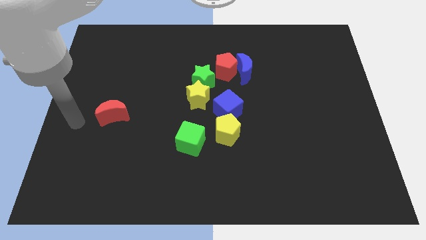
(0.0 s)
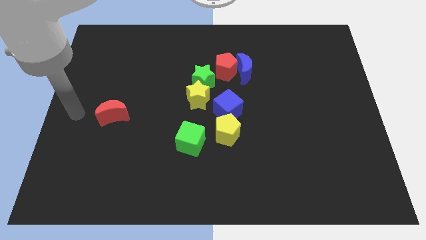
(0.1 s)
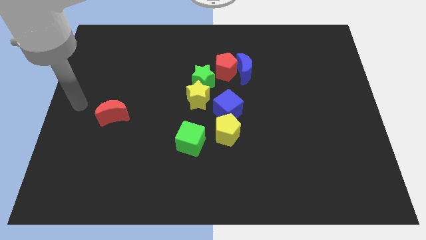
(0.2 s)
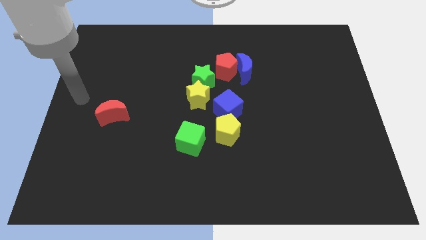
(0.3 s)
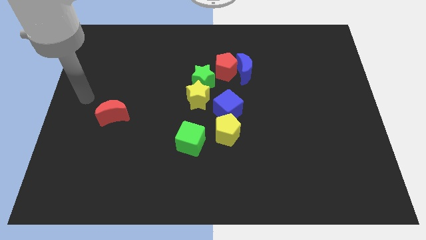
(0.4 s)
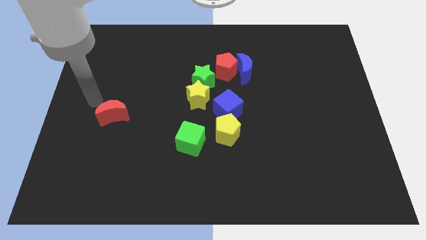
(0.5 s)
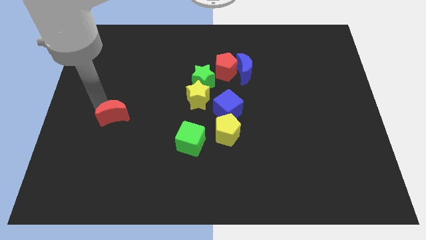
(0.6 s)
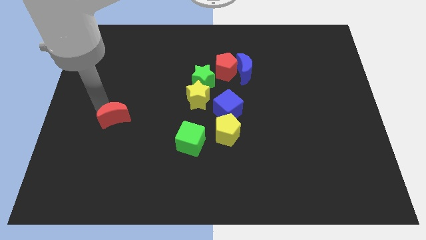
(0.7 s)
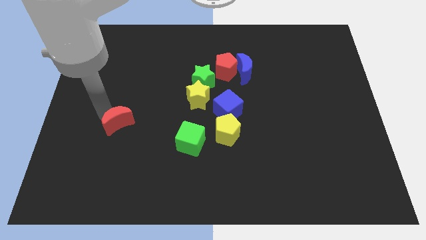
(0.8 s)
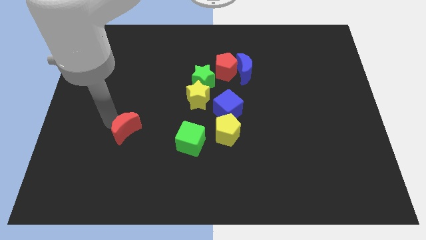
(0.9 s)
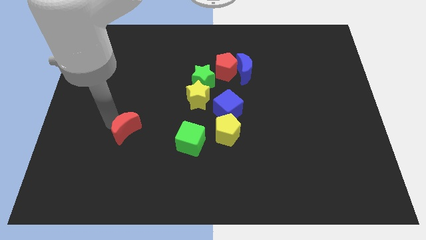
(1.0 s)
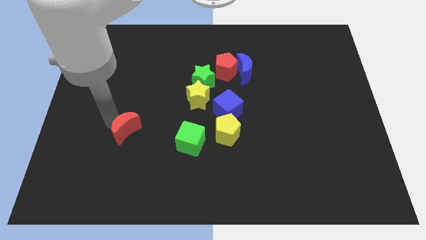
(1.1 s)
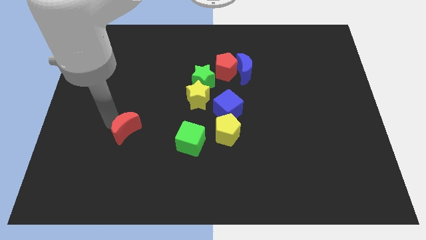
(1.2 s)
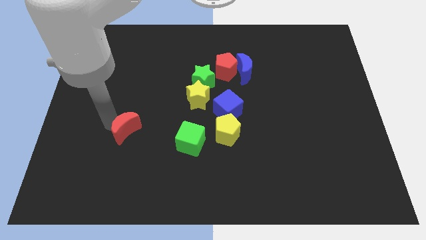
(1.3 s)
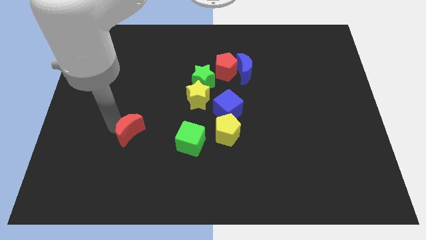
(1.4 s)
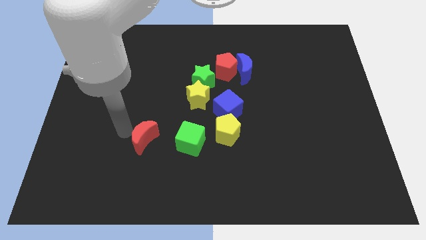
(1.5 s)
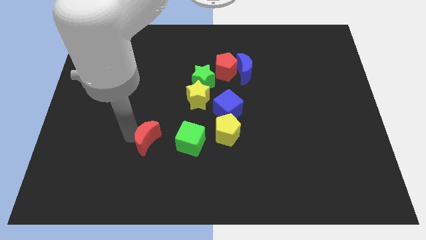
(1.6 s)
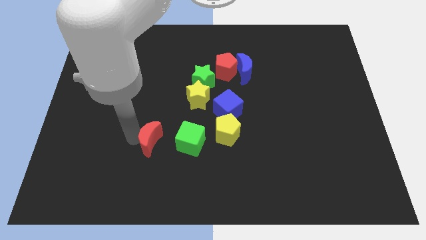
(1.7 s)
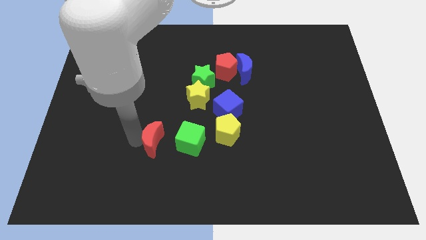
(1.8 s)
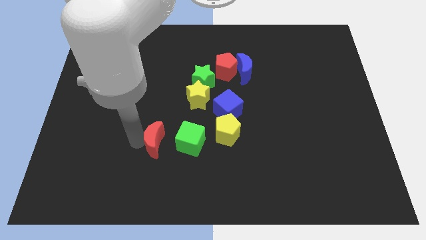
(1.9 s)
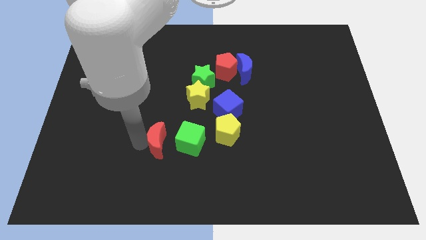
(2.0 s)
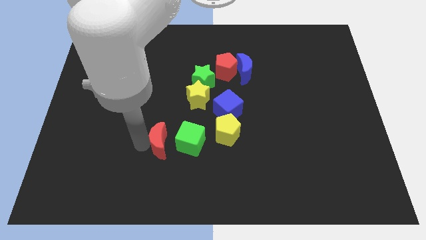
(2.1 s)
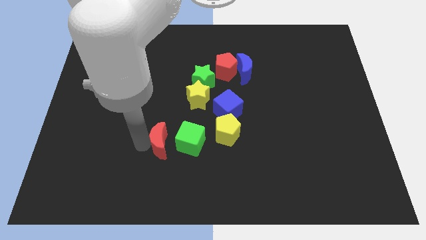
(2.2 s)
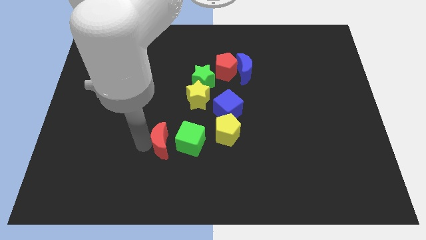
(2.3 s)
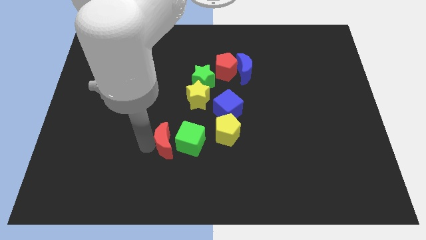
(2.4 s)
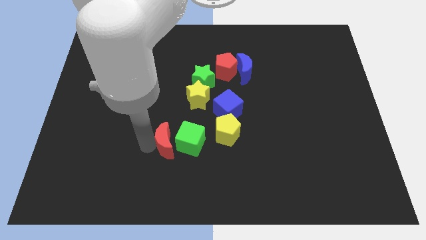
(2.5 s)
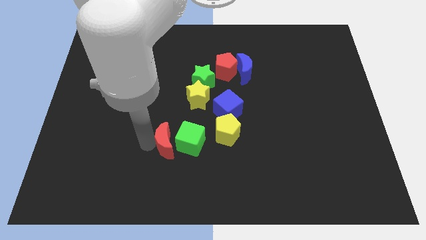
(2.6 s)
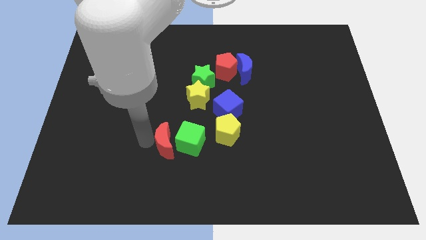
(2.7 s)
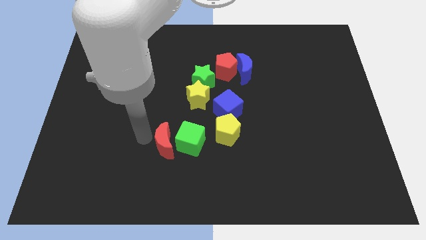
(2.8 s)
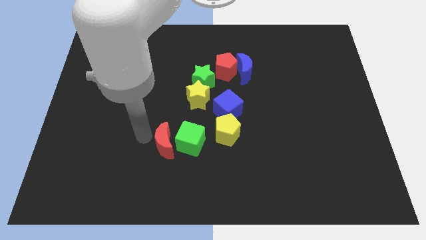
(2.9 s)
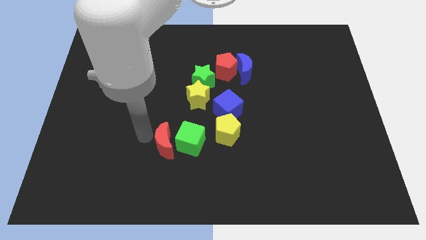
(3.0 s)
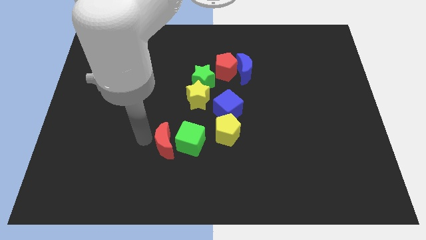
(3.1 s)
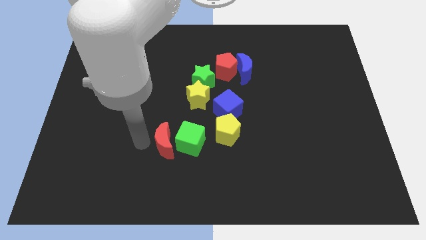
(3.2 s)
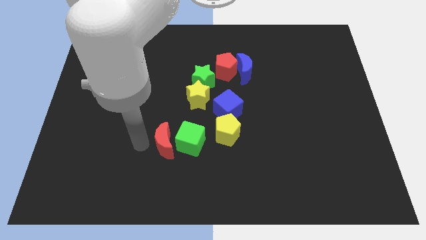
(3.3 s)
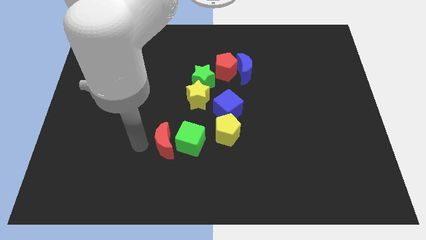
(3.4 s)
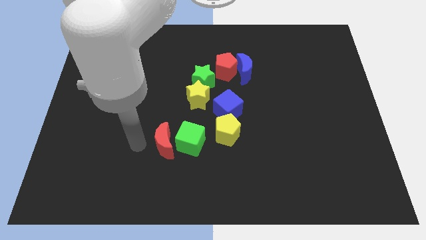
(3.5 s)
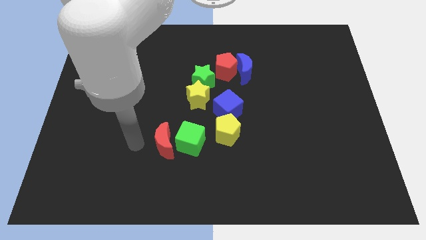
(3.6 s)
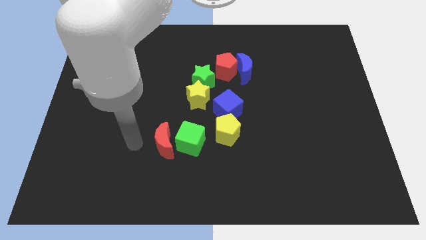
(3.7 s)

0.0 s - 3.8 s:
move the red crescent left to the green cube

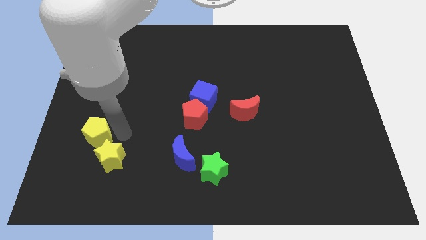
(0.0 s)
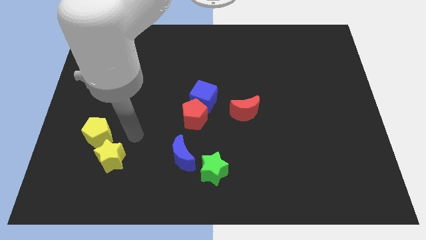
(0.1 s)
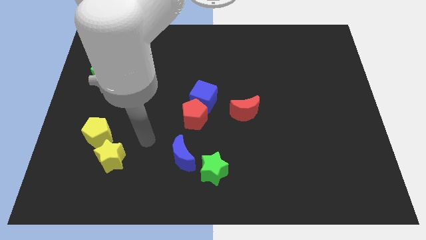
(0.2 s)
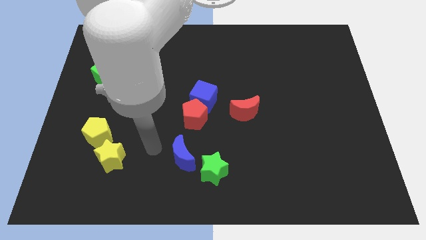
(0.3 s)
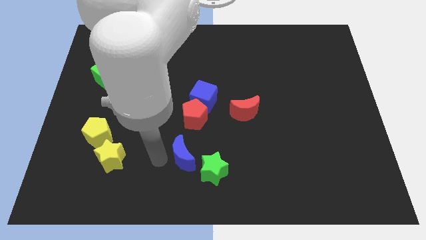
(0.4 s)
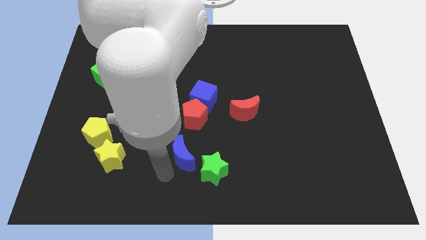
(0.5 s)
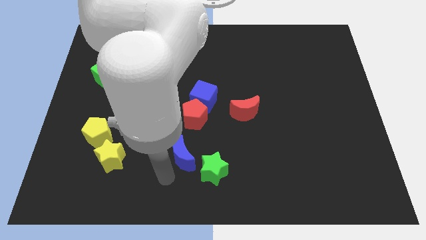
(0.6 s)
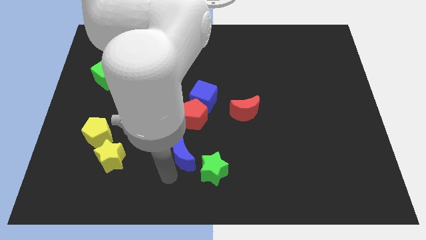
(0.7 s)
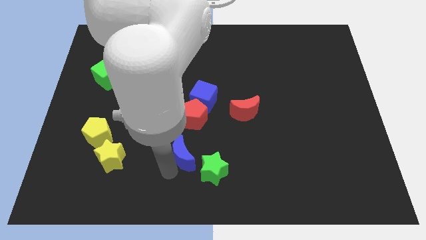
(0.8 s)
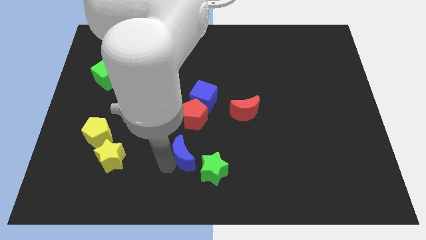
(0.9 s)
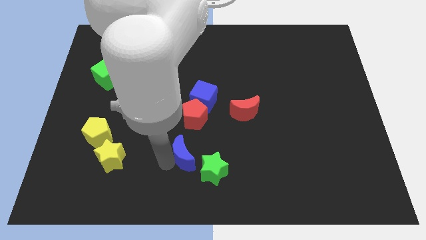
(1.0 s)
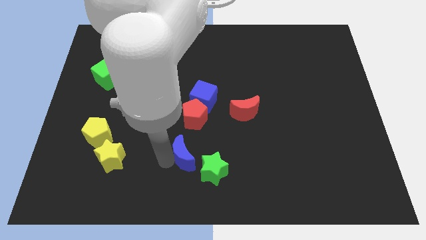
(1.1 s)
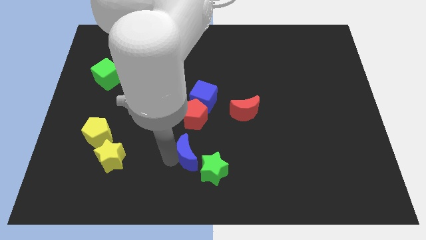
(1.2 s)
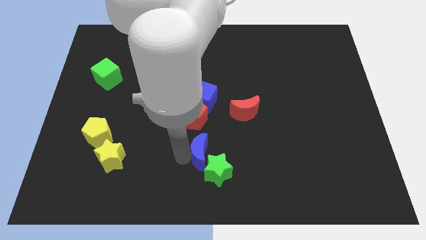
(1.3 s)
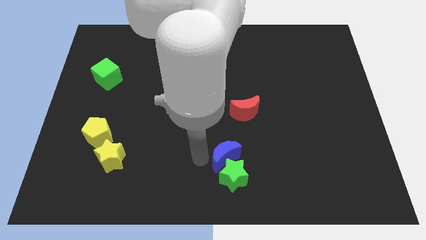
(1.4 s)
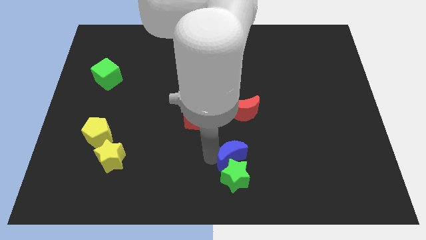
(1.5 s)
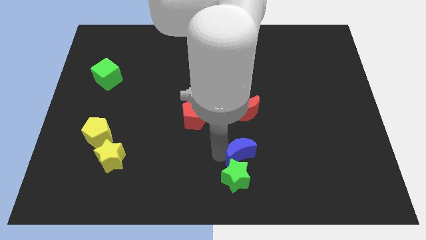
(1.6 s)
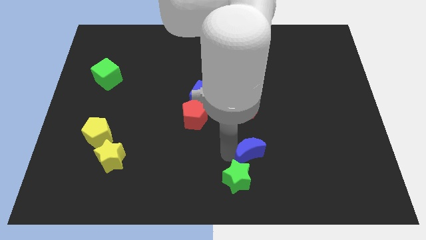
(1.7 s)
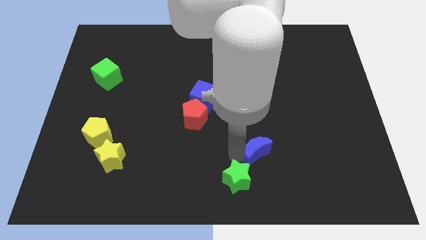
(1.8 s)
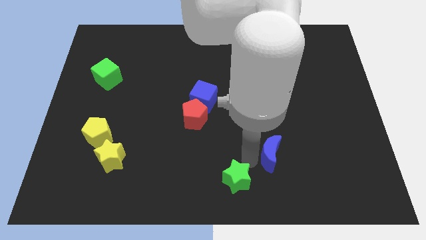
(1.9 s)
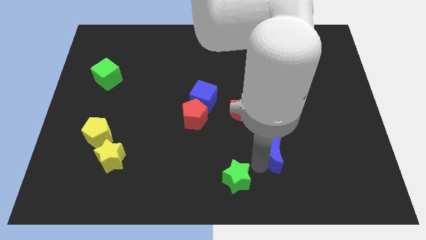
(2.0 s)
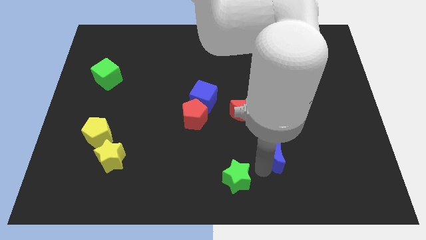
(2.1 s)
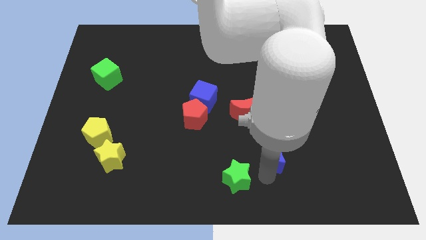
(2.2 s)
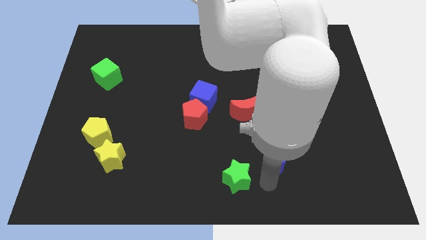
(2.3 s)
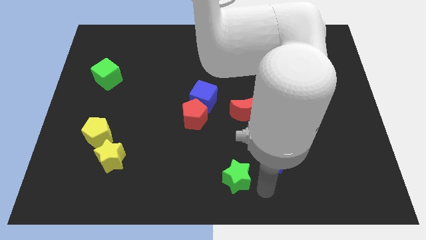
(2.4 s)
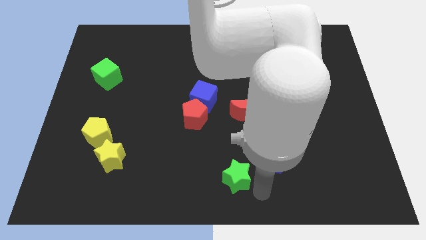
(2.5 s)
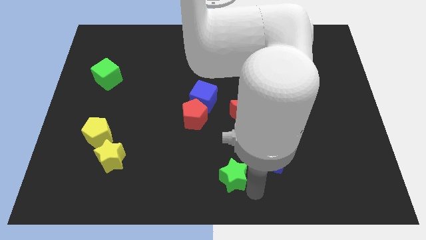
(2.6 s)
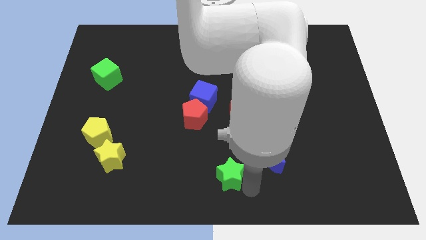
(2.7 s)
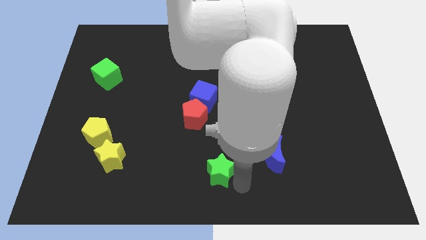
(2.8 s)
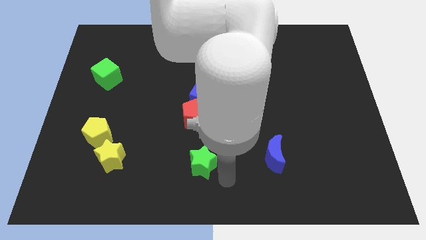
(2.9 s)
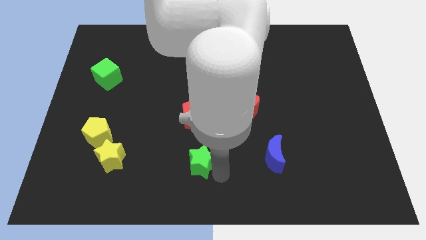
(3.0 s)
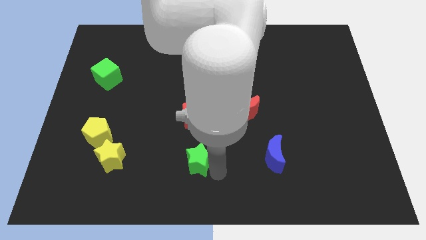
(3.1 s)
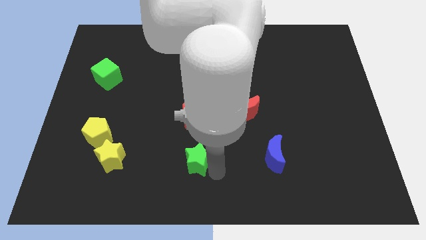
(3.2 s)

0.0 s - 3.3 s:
place the green star at the bottom center of the board

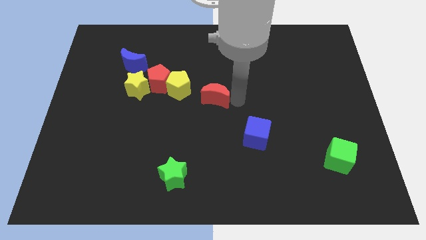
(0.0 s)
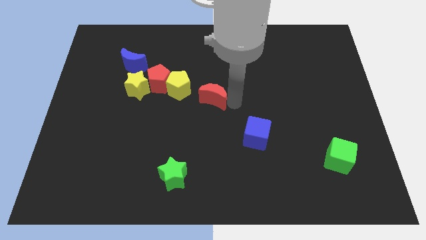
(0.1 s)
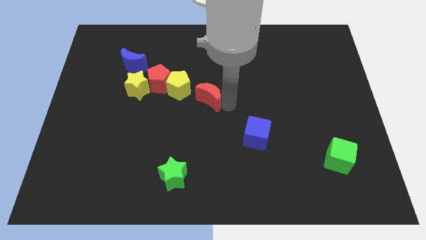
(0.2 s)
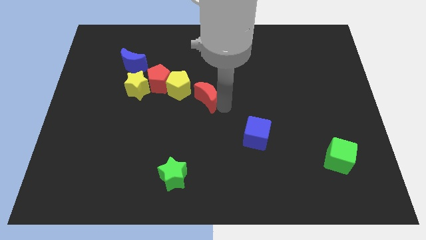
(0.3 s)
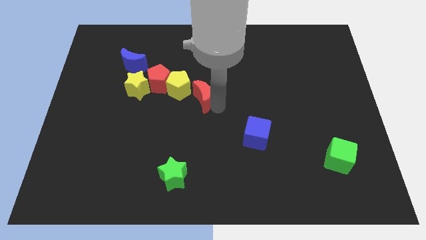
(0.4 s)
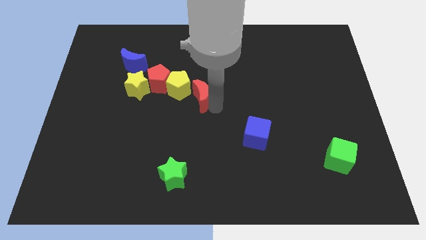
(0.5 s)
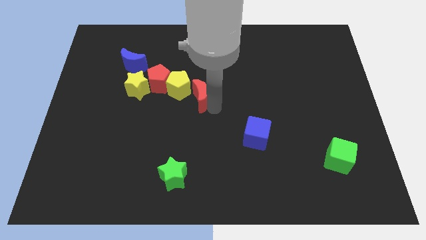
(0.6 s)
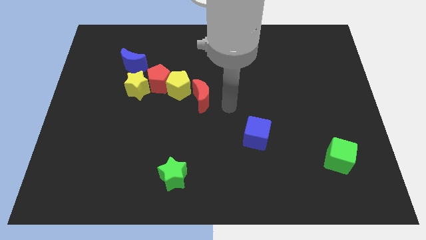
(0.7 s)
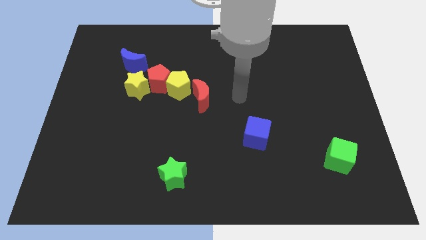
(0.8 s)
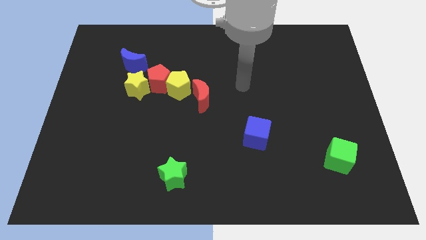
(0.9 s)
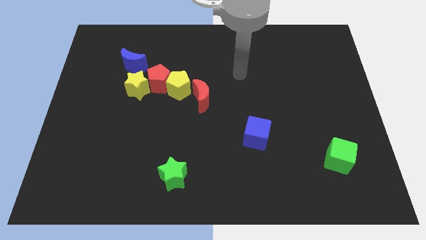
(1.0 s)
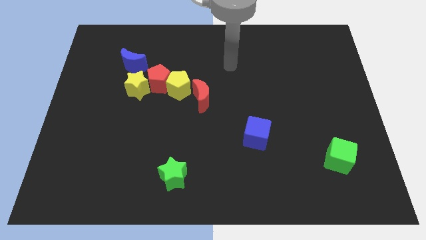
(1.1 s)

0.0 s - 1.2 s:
slide red moon into yellow pentagon

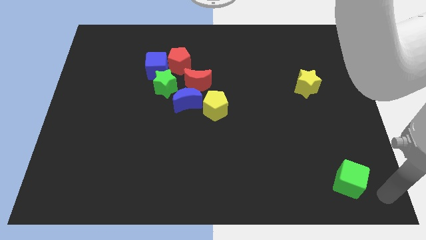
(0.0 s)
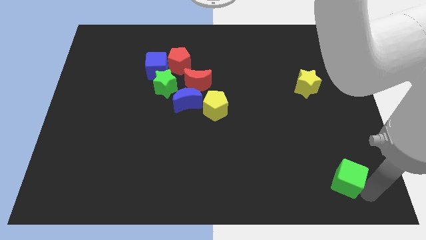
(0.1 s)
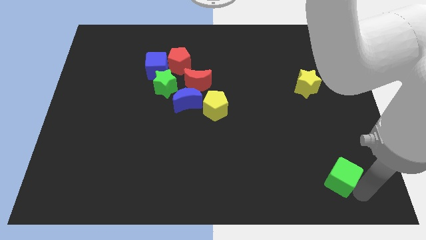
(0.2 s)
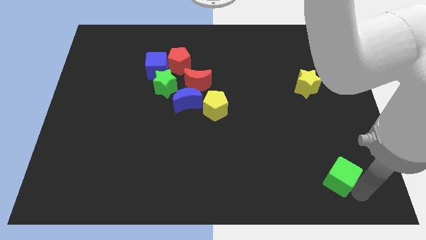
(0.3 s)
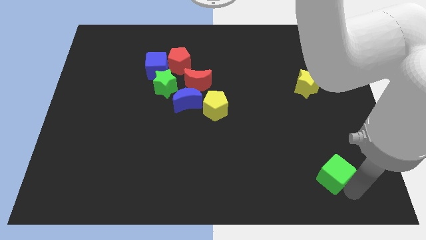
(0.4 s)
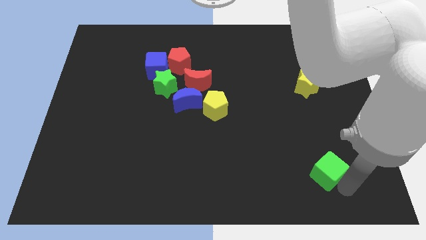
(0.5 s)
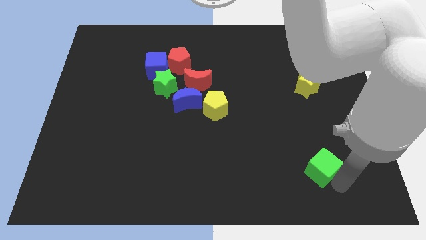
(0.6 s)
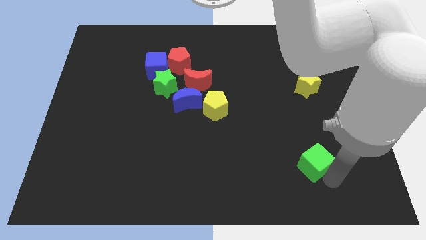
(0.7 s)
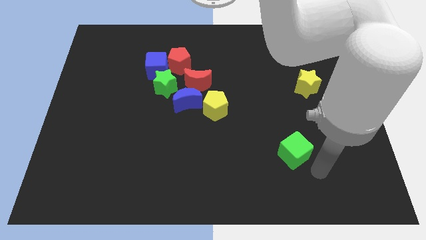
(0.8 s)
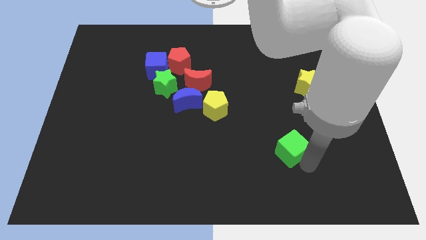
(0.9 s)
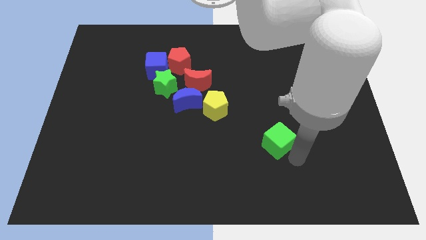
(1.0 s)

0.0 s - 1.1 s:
move the green cube diagonally to the bottom right of the yellow pentagon
